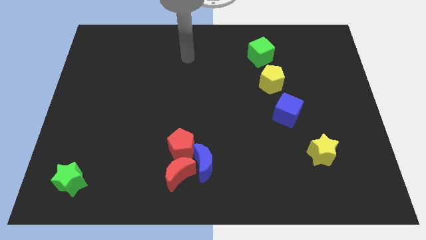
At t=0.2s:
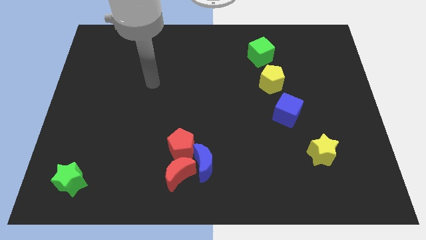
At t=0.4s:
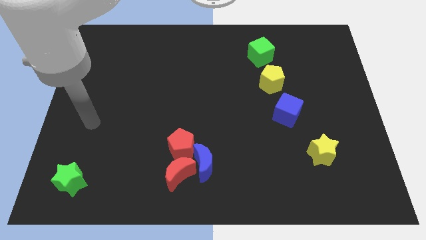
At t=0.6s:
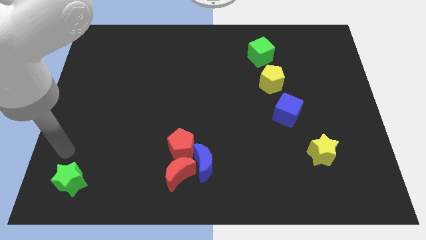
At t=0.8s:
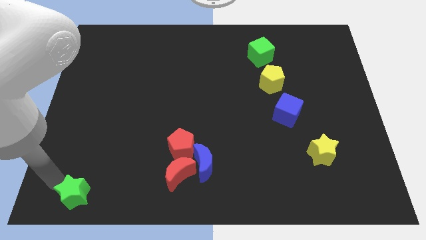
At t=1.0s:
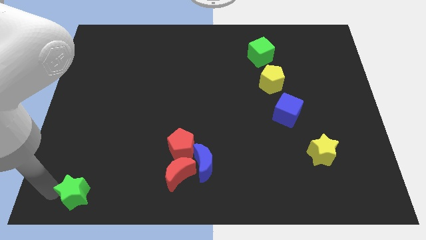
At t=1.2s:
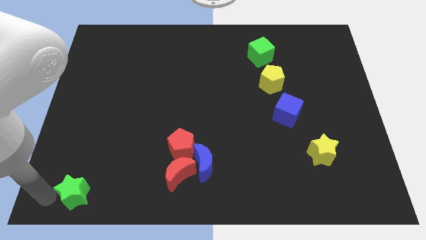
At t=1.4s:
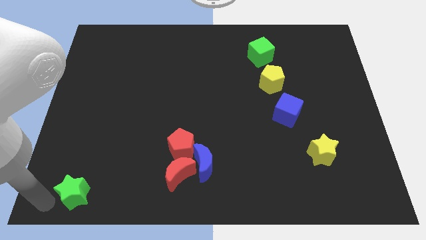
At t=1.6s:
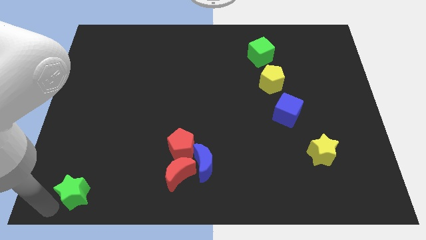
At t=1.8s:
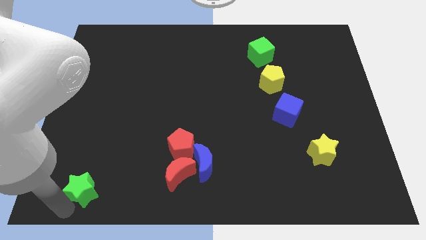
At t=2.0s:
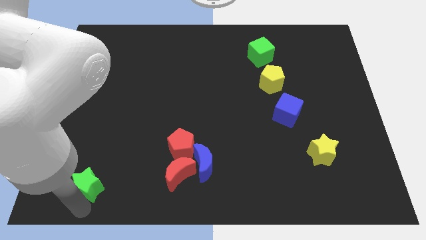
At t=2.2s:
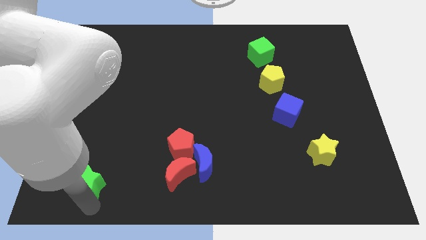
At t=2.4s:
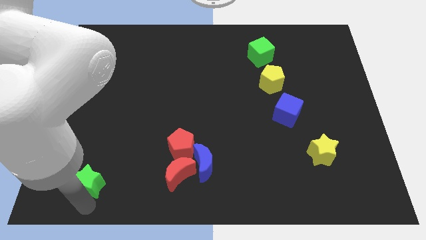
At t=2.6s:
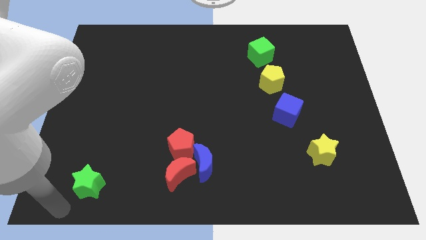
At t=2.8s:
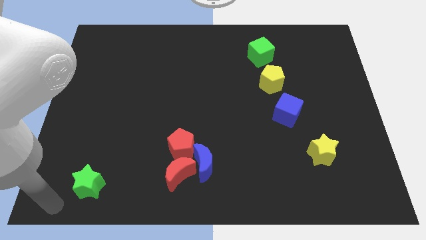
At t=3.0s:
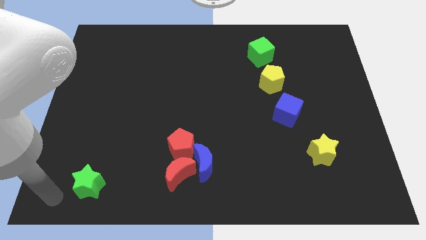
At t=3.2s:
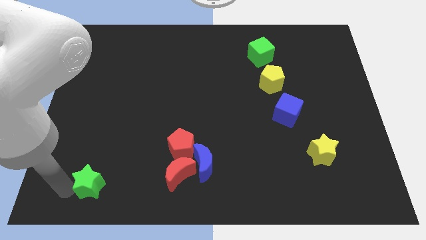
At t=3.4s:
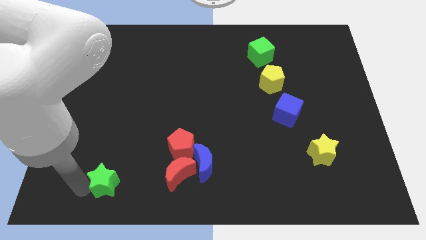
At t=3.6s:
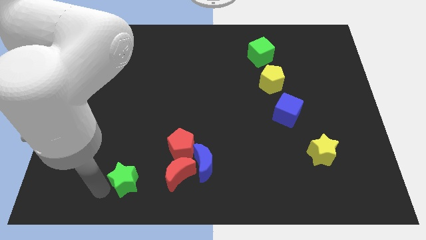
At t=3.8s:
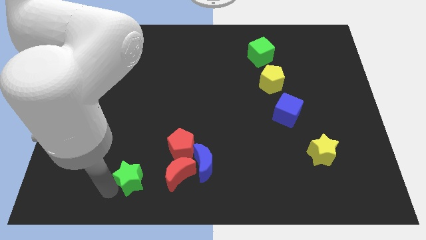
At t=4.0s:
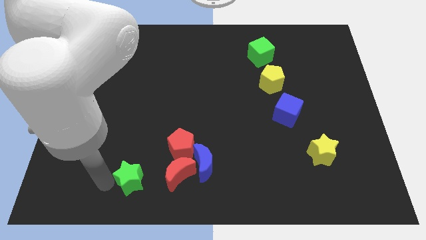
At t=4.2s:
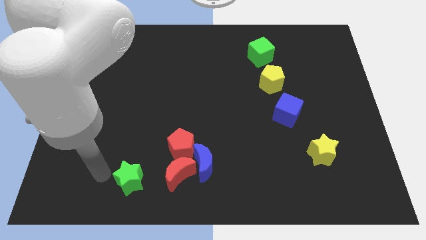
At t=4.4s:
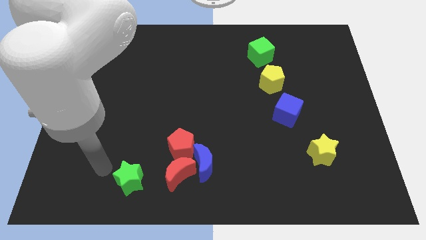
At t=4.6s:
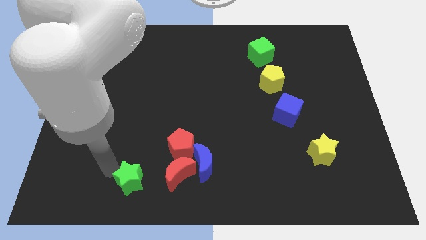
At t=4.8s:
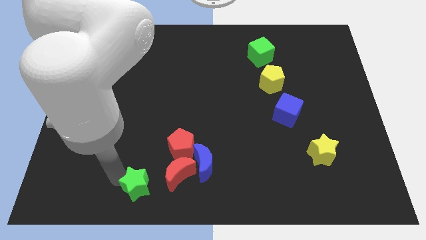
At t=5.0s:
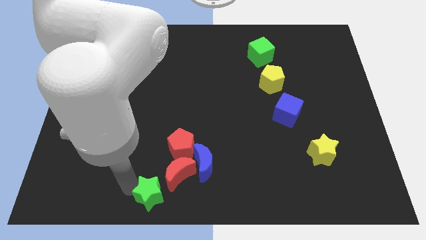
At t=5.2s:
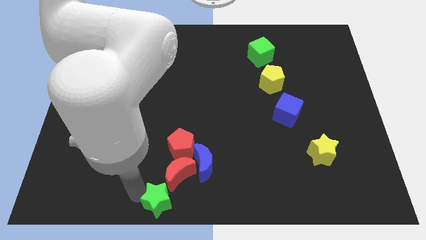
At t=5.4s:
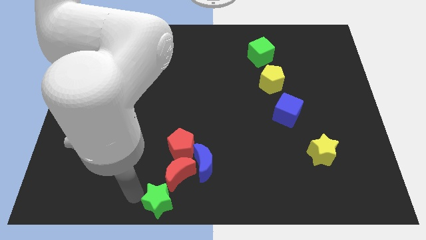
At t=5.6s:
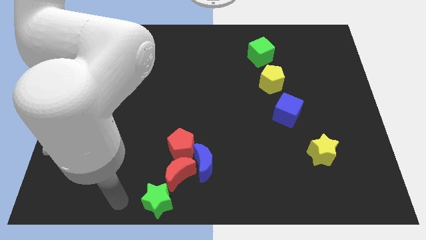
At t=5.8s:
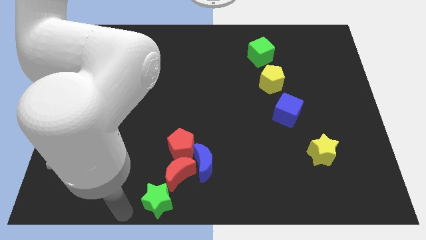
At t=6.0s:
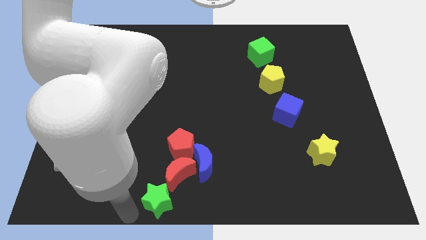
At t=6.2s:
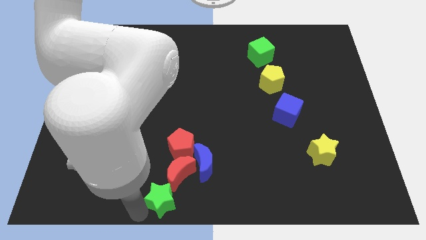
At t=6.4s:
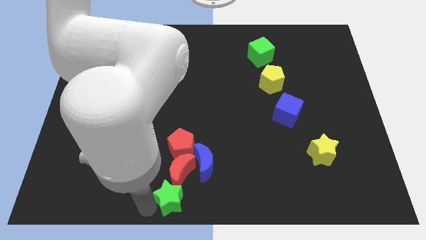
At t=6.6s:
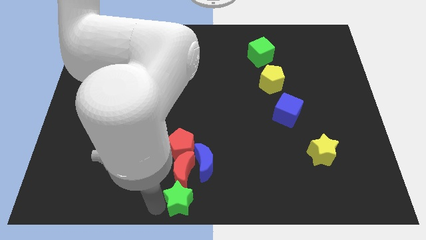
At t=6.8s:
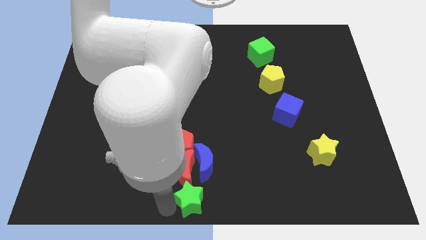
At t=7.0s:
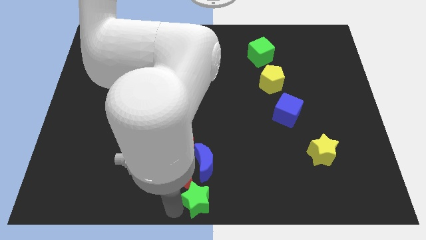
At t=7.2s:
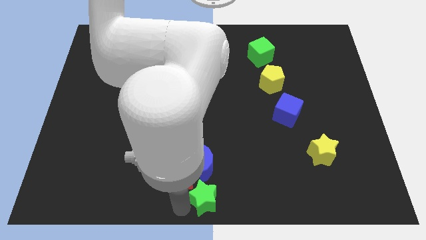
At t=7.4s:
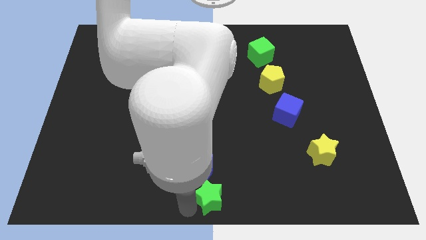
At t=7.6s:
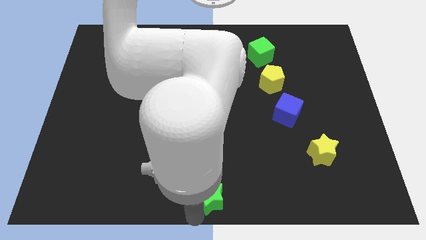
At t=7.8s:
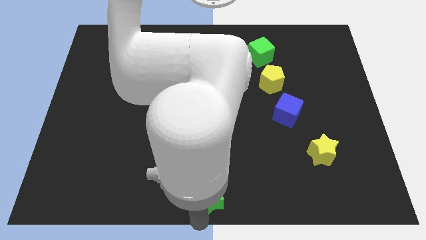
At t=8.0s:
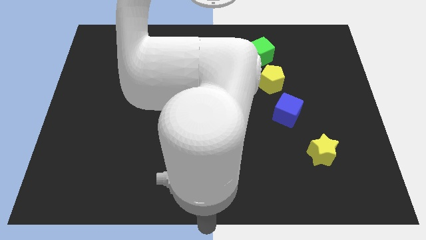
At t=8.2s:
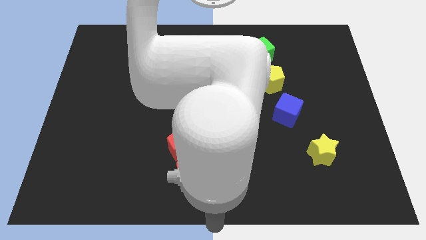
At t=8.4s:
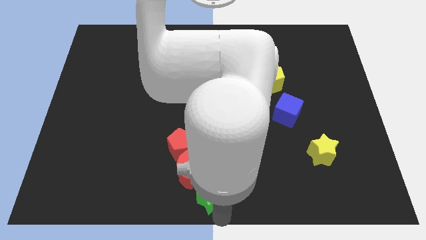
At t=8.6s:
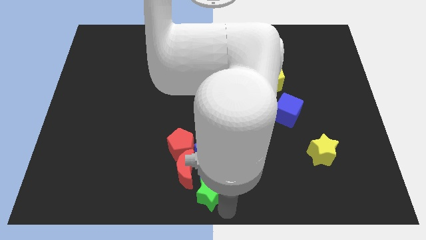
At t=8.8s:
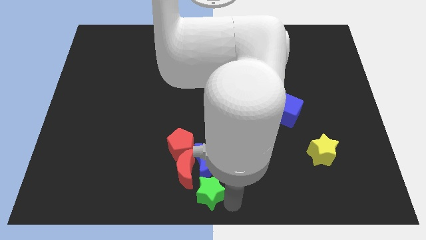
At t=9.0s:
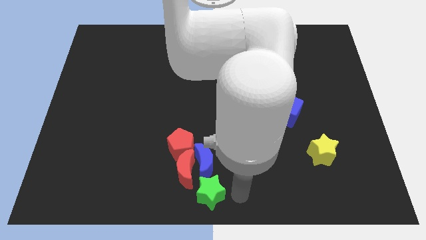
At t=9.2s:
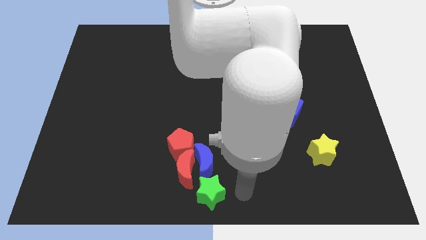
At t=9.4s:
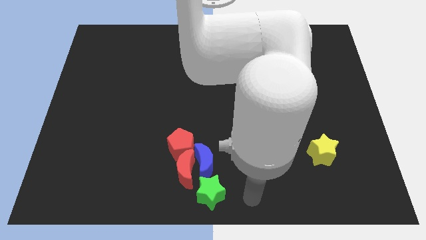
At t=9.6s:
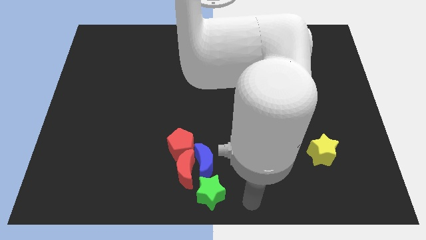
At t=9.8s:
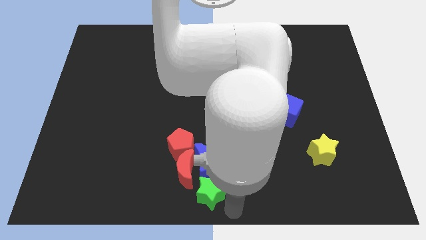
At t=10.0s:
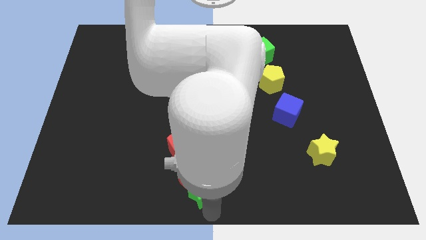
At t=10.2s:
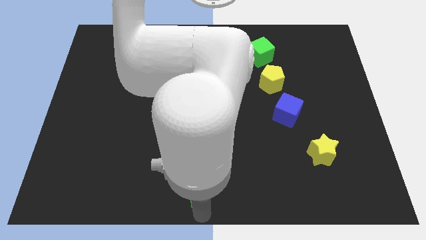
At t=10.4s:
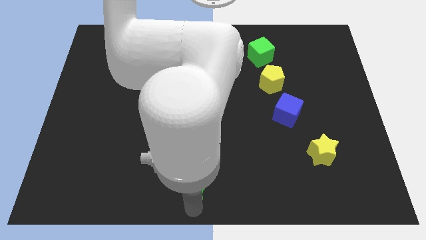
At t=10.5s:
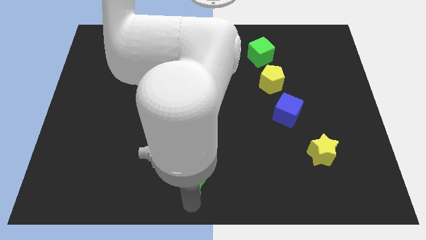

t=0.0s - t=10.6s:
put the green star close to the blue moon

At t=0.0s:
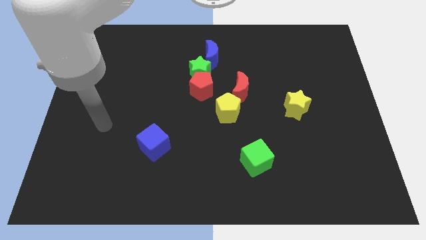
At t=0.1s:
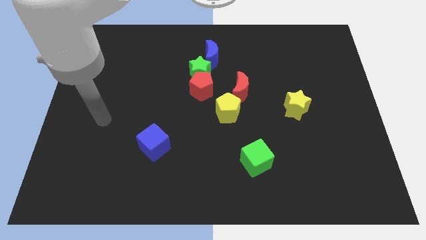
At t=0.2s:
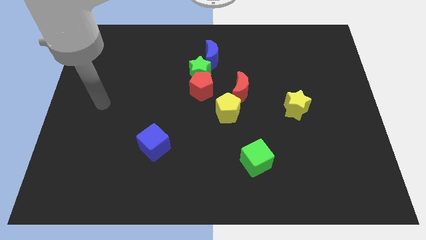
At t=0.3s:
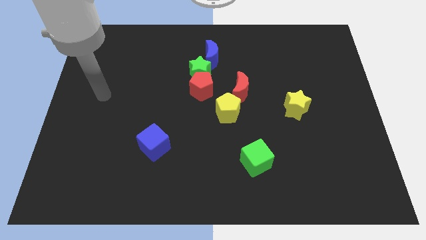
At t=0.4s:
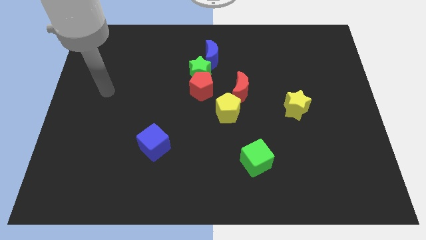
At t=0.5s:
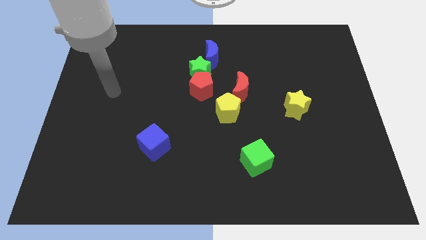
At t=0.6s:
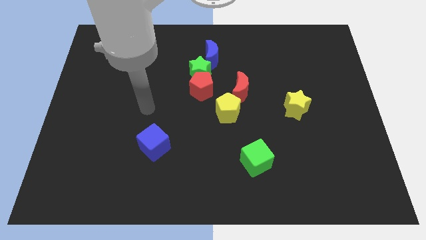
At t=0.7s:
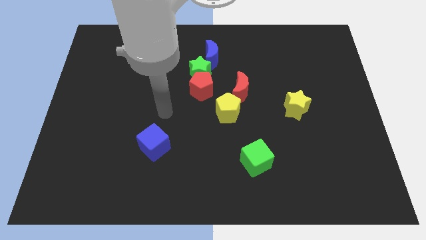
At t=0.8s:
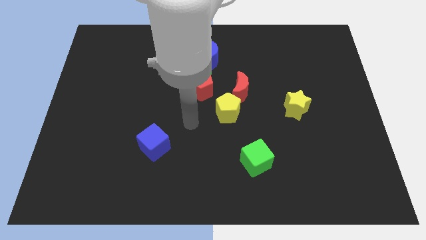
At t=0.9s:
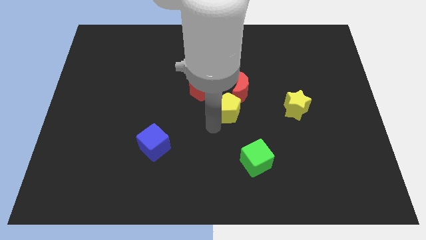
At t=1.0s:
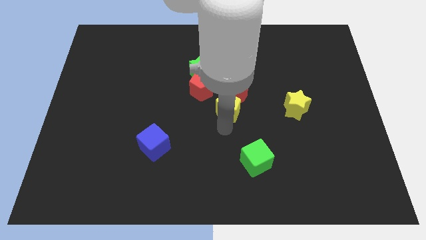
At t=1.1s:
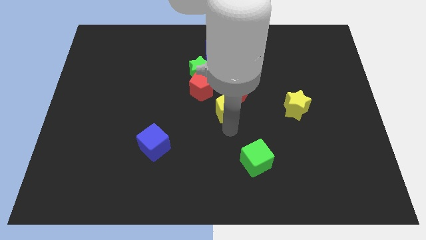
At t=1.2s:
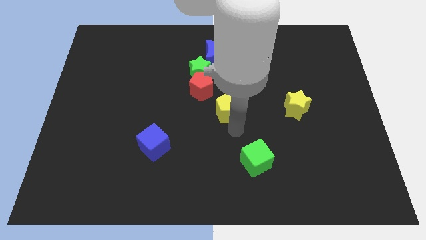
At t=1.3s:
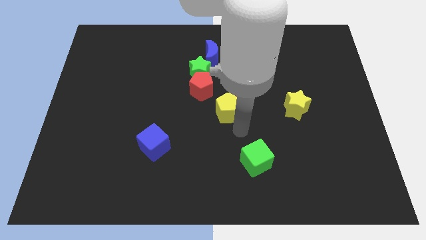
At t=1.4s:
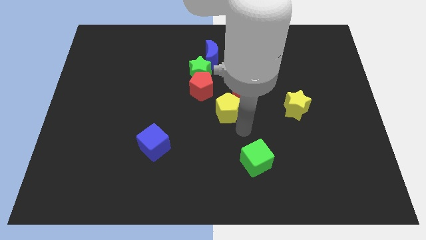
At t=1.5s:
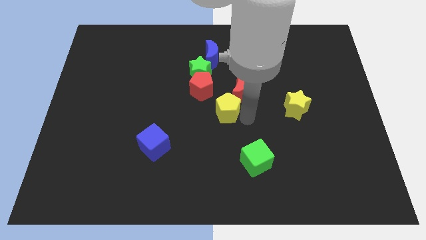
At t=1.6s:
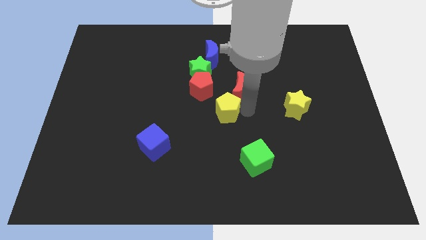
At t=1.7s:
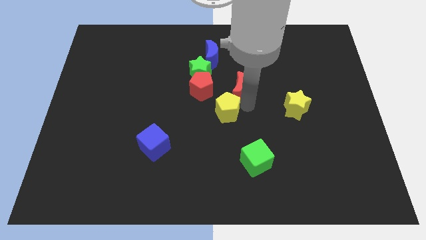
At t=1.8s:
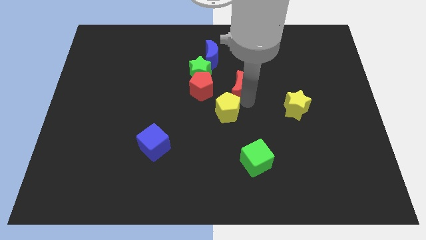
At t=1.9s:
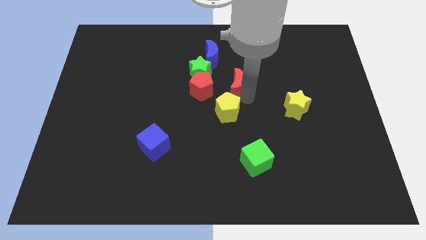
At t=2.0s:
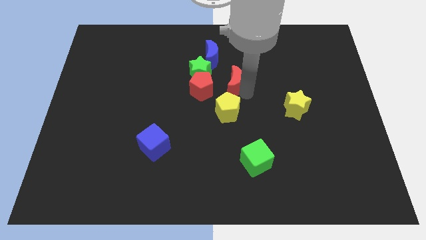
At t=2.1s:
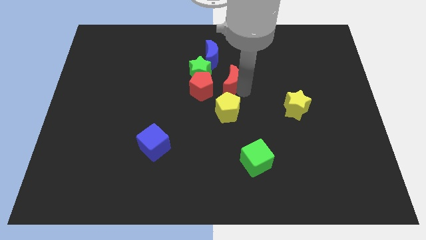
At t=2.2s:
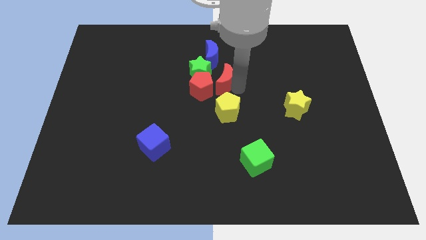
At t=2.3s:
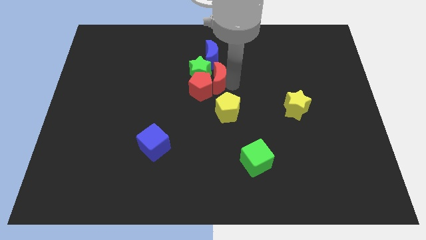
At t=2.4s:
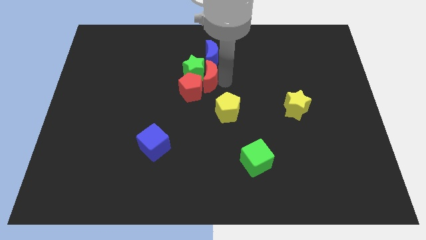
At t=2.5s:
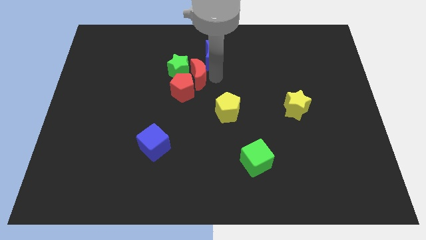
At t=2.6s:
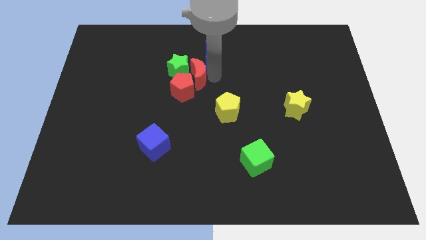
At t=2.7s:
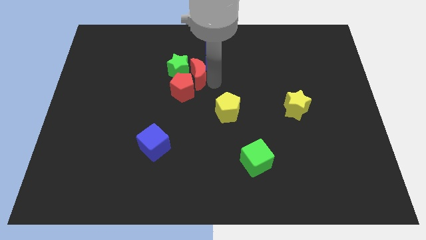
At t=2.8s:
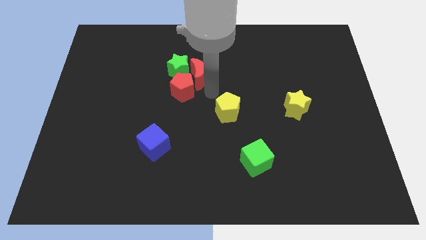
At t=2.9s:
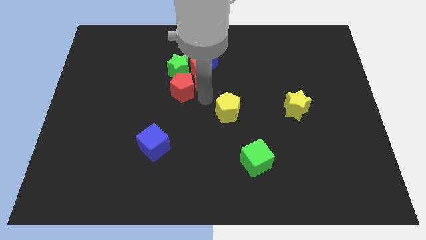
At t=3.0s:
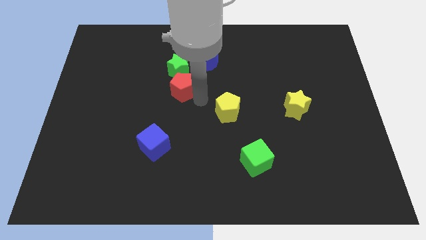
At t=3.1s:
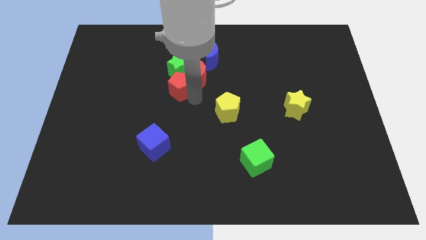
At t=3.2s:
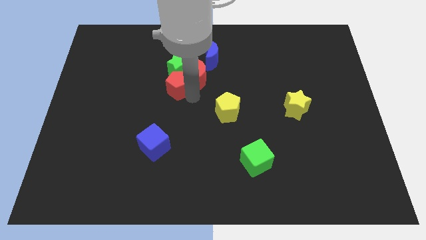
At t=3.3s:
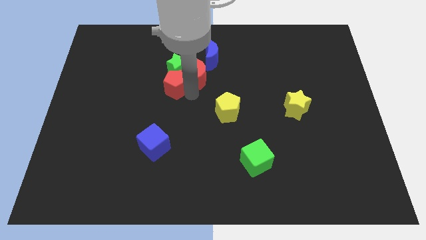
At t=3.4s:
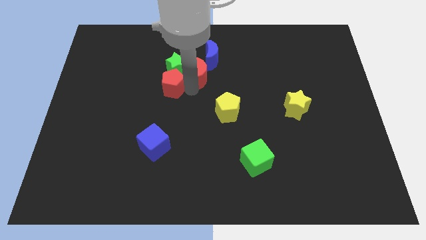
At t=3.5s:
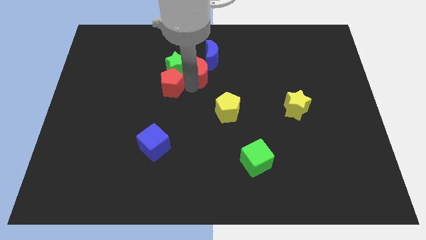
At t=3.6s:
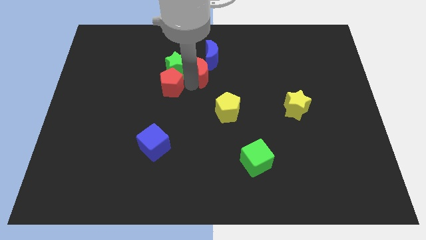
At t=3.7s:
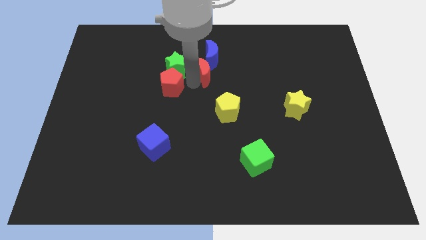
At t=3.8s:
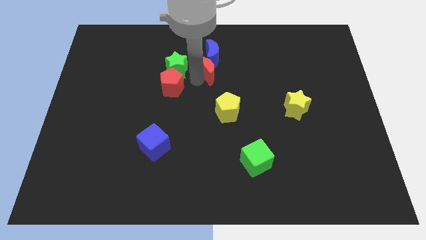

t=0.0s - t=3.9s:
push the red moon towards the blue moon
